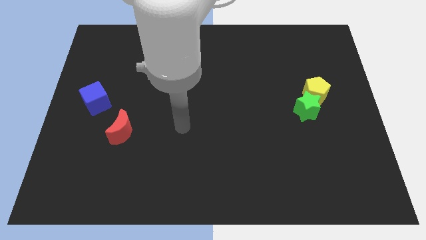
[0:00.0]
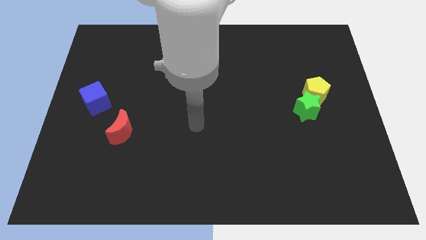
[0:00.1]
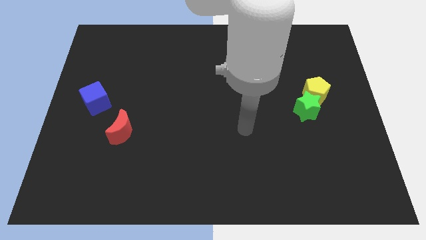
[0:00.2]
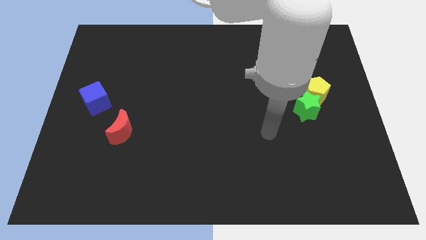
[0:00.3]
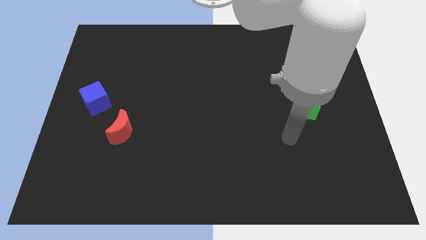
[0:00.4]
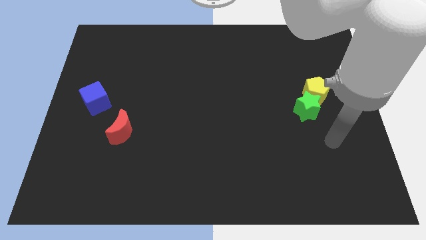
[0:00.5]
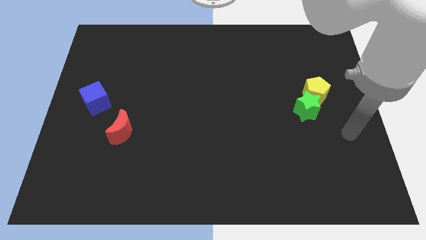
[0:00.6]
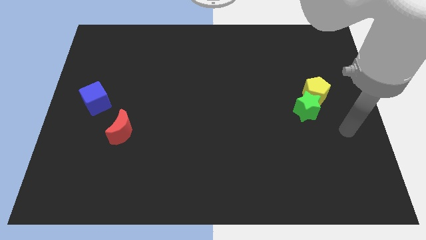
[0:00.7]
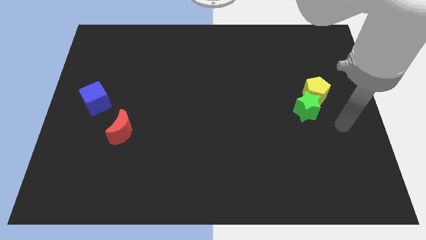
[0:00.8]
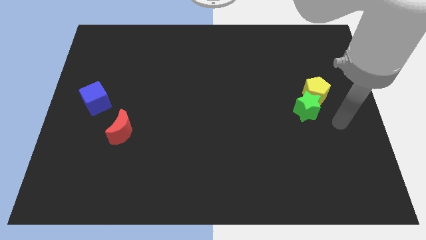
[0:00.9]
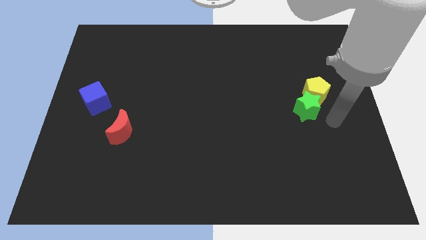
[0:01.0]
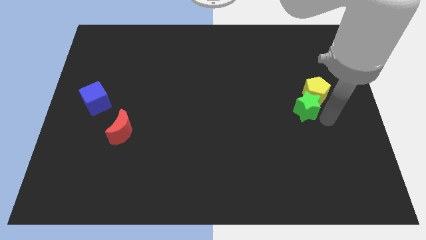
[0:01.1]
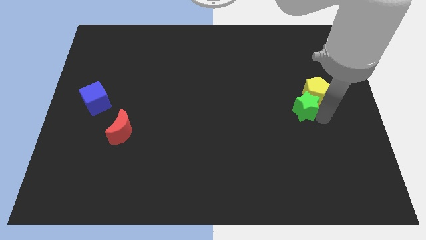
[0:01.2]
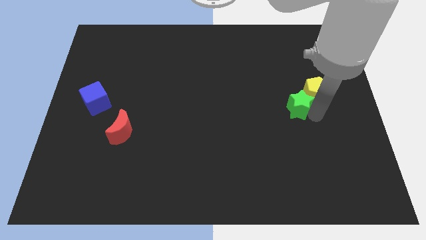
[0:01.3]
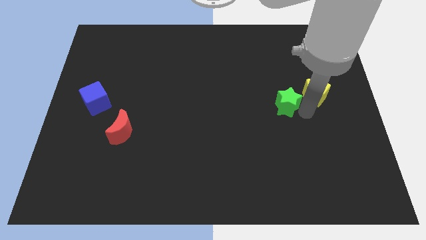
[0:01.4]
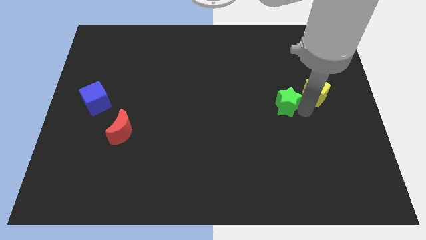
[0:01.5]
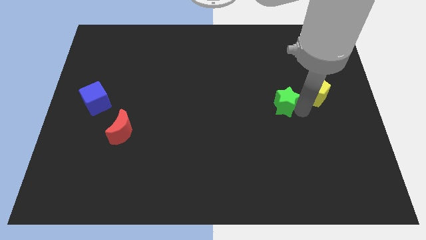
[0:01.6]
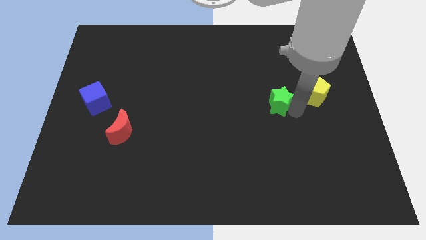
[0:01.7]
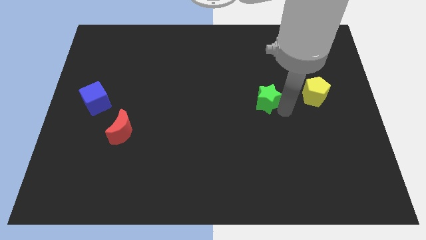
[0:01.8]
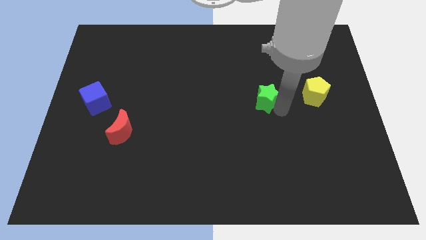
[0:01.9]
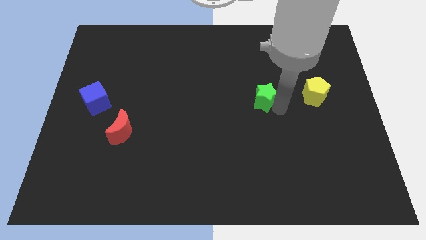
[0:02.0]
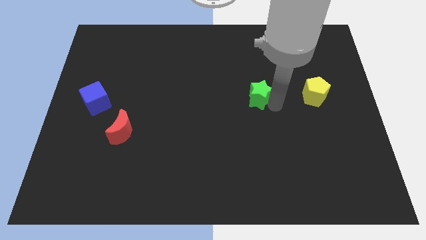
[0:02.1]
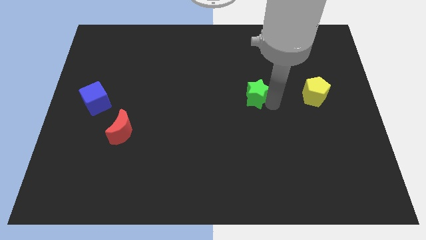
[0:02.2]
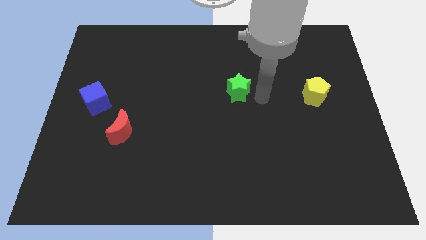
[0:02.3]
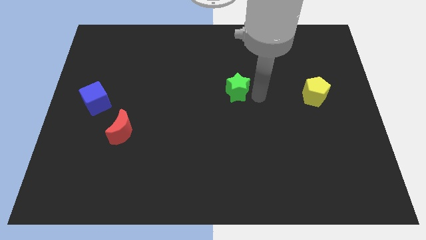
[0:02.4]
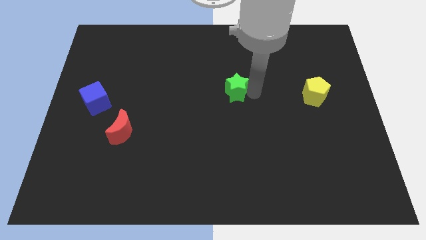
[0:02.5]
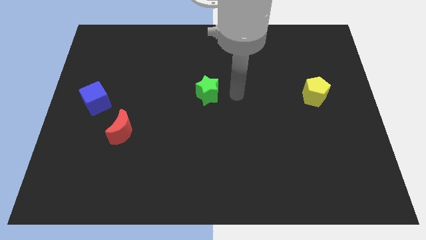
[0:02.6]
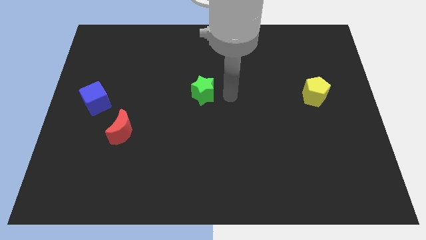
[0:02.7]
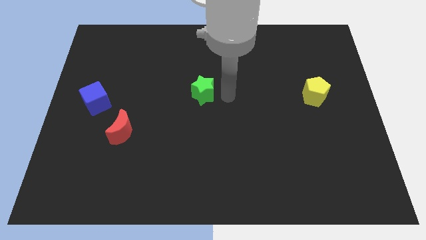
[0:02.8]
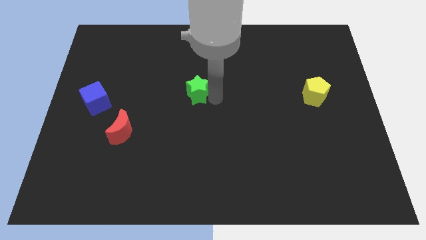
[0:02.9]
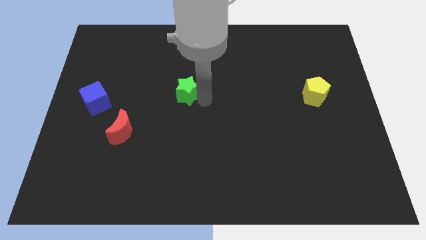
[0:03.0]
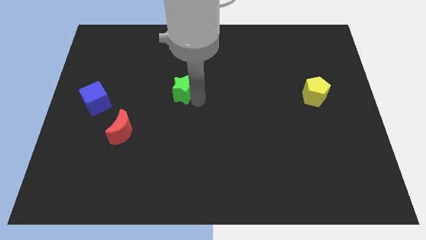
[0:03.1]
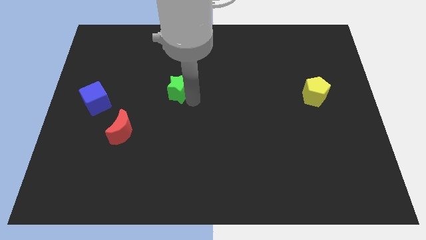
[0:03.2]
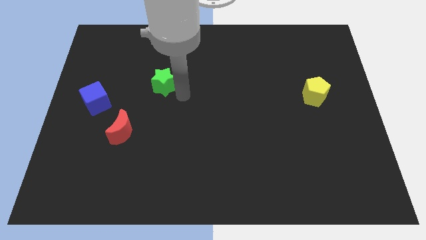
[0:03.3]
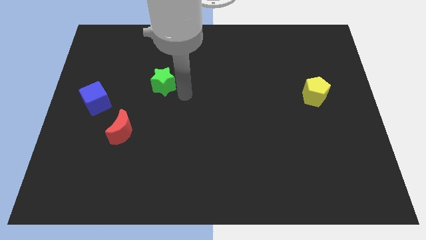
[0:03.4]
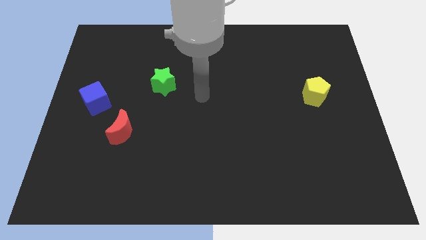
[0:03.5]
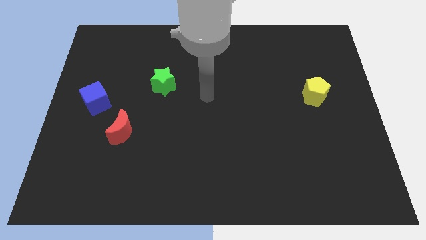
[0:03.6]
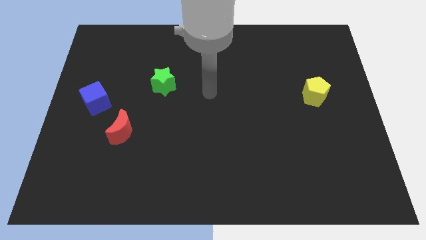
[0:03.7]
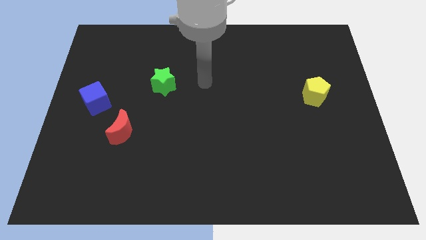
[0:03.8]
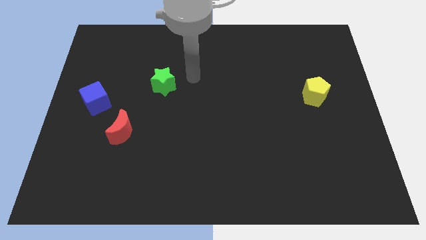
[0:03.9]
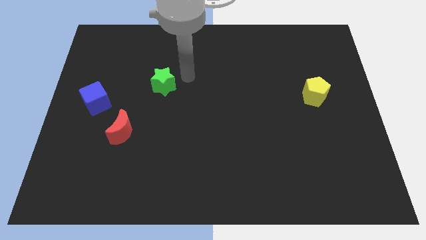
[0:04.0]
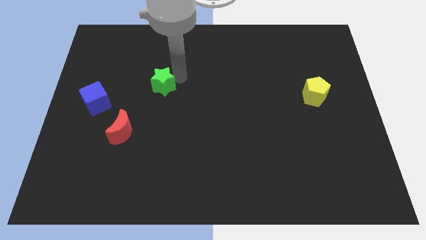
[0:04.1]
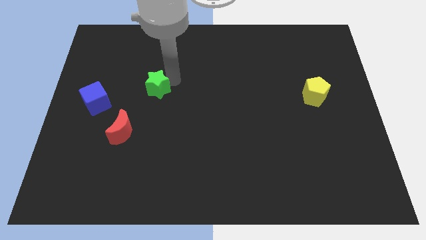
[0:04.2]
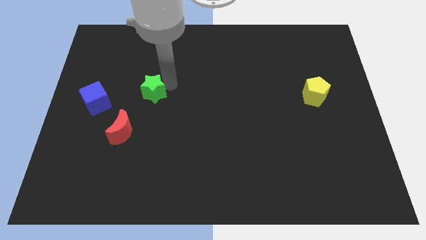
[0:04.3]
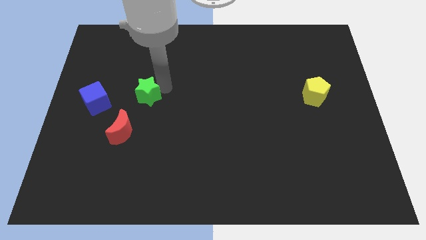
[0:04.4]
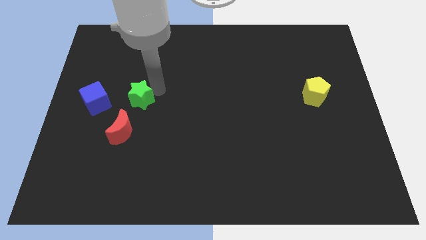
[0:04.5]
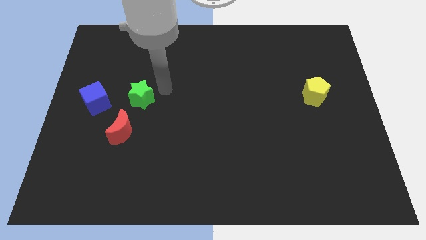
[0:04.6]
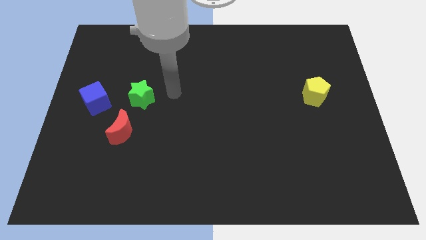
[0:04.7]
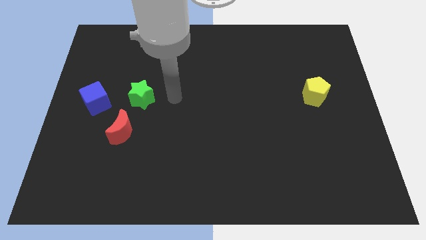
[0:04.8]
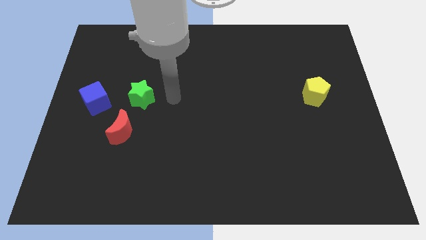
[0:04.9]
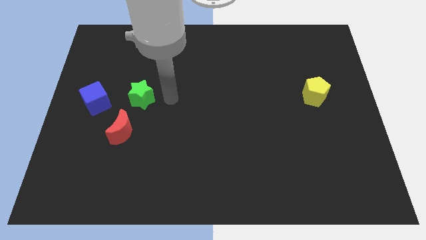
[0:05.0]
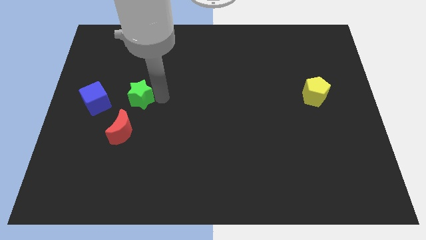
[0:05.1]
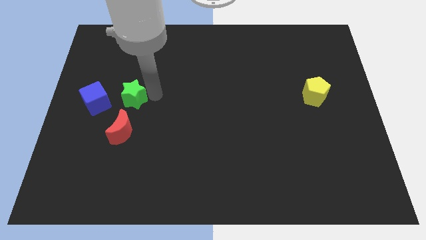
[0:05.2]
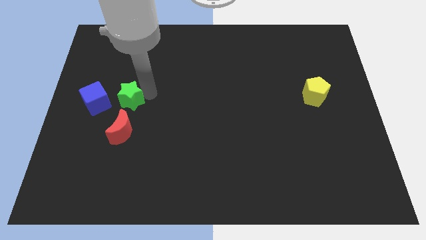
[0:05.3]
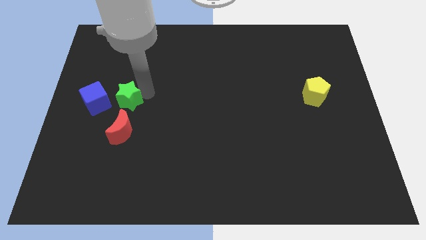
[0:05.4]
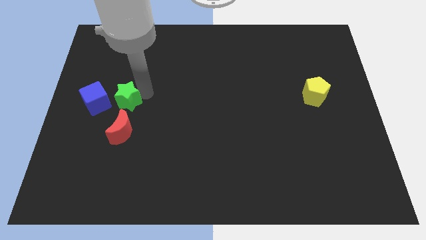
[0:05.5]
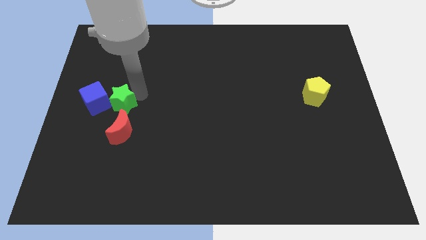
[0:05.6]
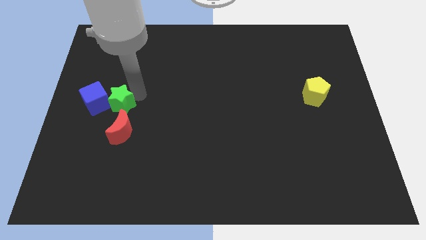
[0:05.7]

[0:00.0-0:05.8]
put the green block next to the cube

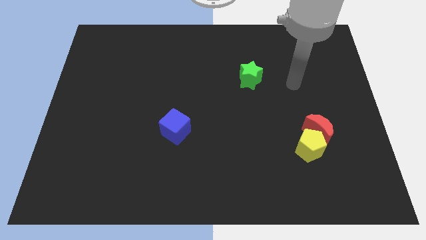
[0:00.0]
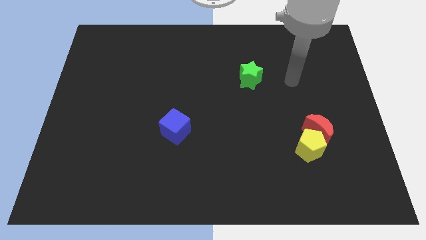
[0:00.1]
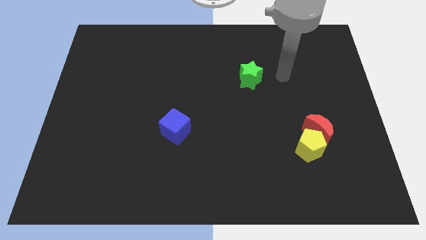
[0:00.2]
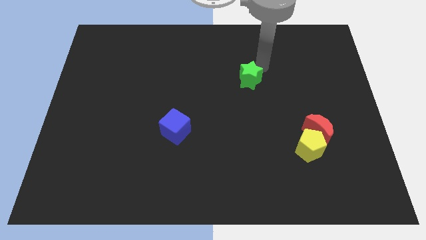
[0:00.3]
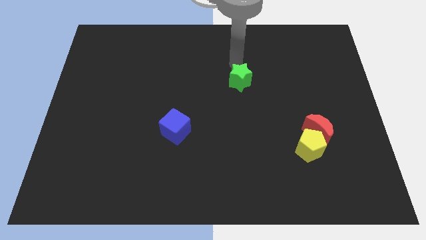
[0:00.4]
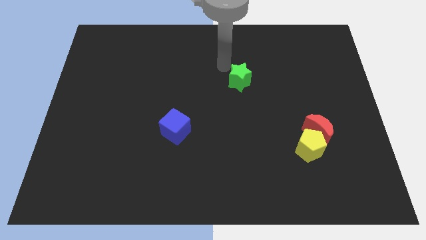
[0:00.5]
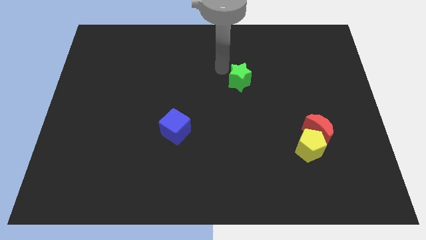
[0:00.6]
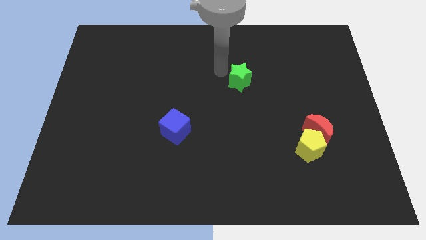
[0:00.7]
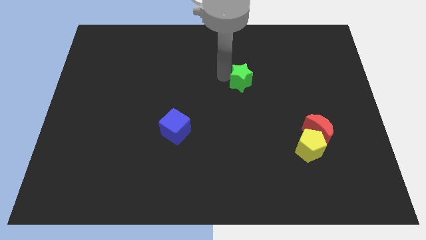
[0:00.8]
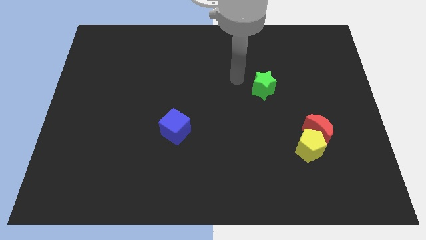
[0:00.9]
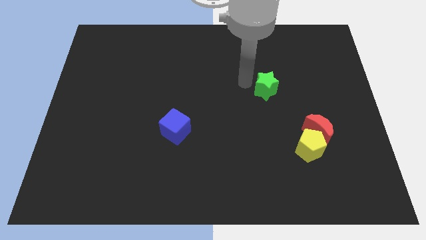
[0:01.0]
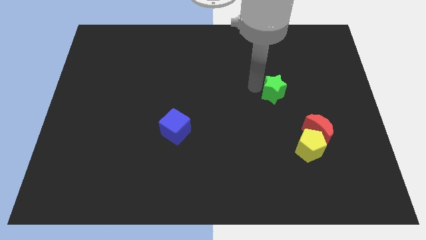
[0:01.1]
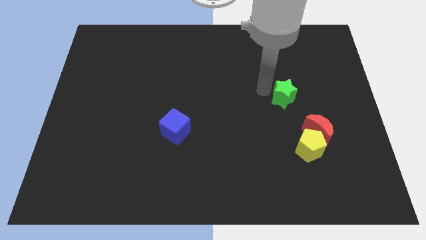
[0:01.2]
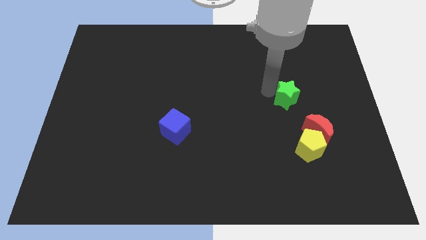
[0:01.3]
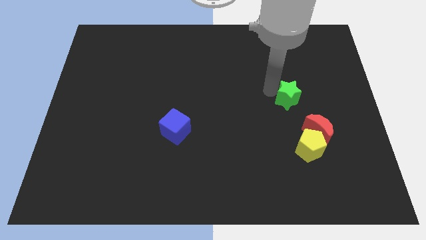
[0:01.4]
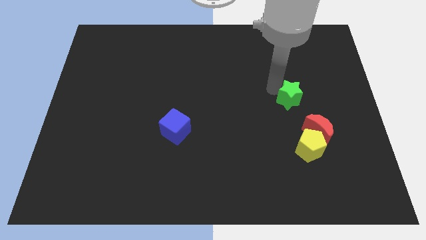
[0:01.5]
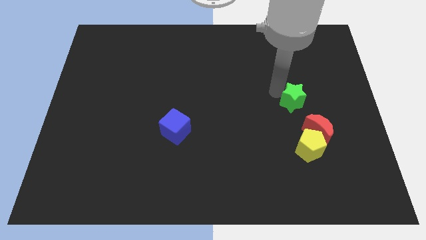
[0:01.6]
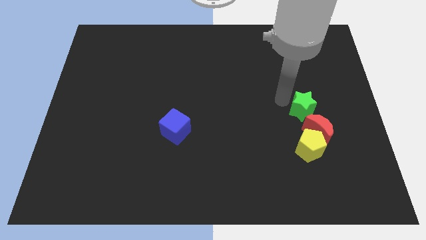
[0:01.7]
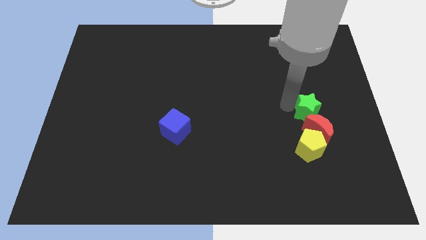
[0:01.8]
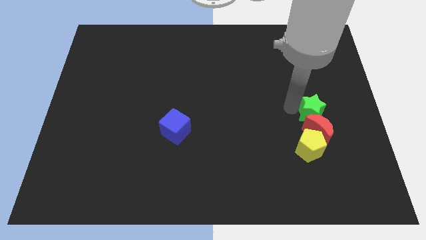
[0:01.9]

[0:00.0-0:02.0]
put the green block to the moon

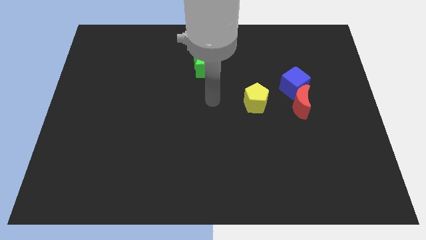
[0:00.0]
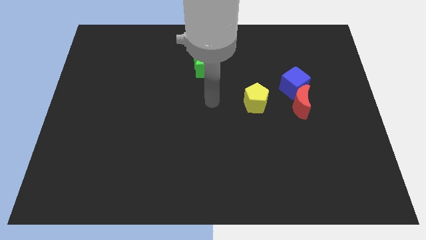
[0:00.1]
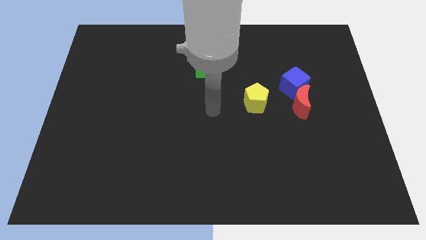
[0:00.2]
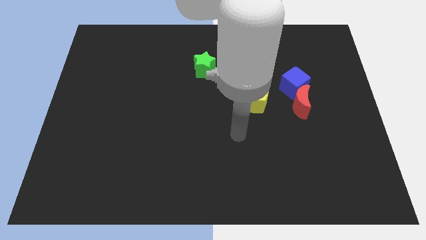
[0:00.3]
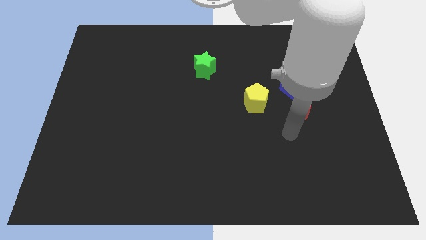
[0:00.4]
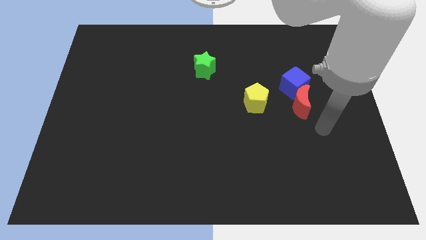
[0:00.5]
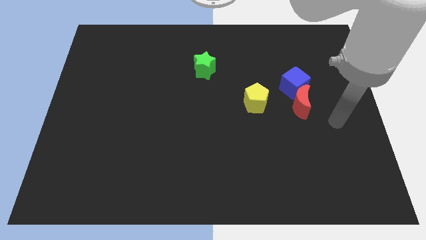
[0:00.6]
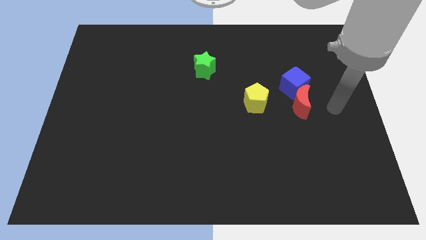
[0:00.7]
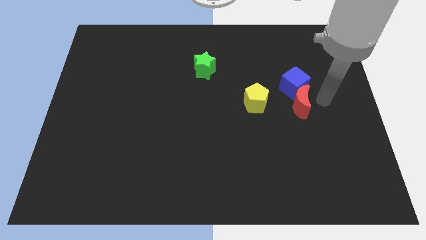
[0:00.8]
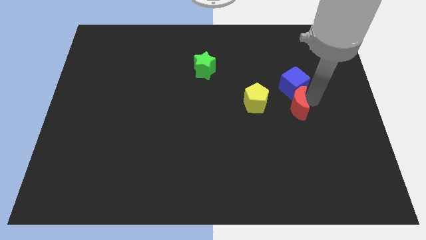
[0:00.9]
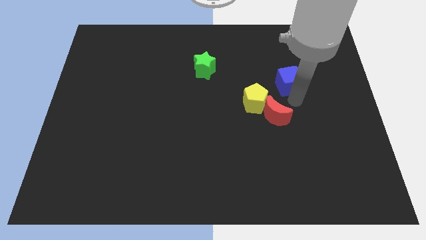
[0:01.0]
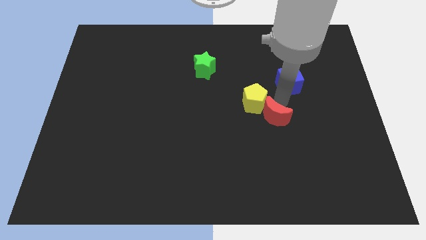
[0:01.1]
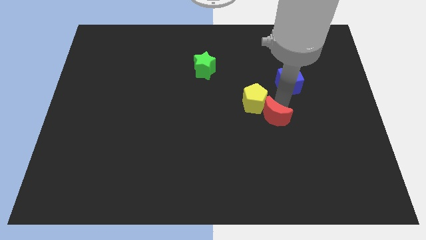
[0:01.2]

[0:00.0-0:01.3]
put the red moon next to the pentagon
